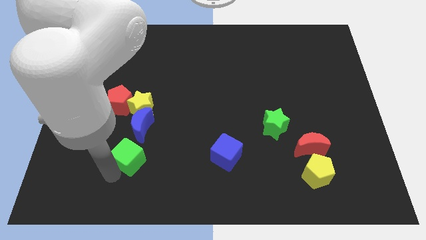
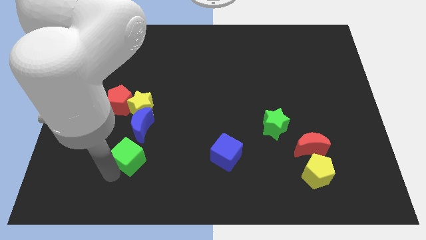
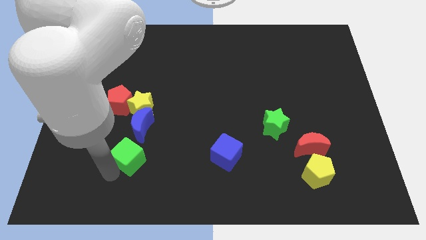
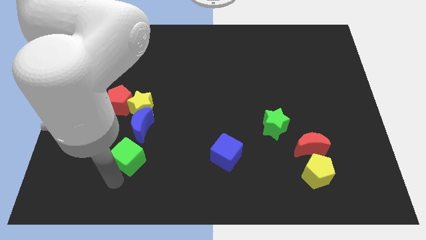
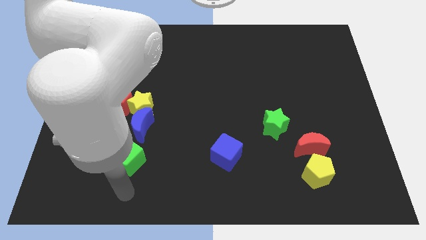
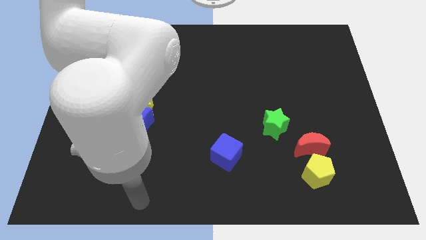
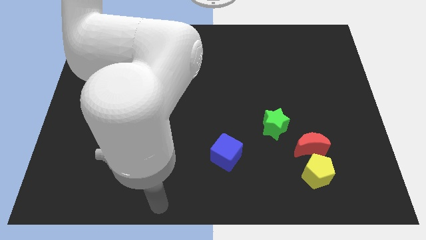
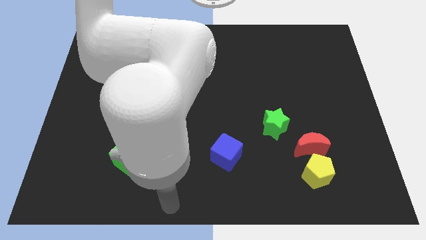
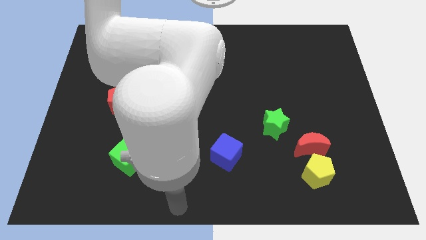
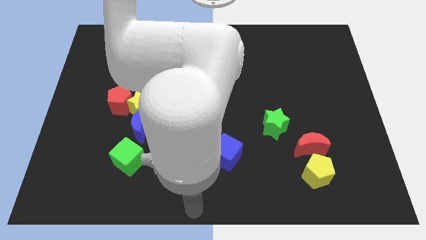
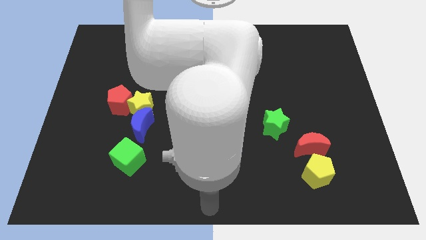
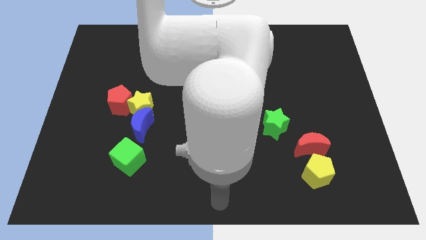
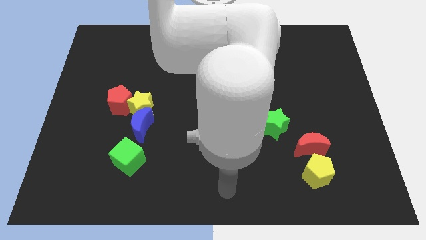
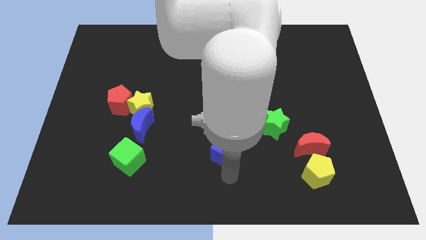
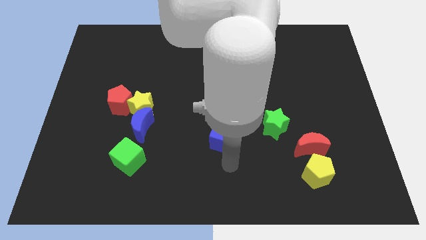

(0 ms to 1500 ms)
move your hand at the bottom of the blue cube

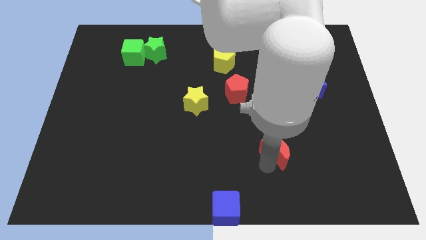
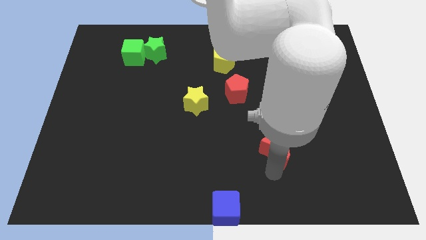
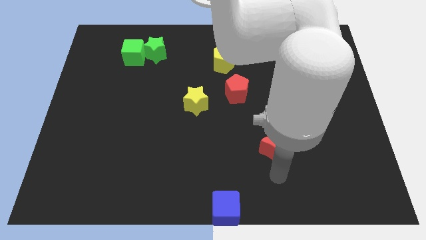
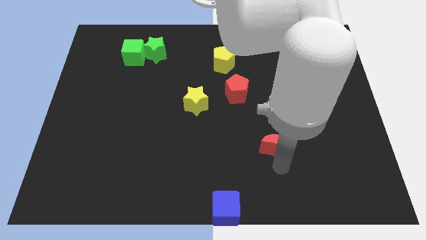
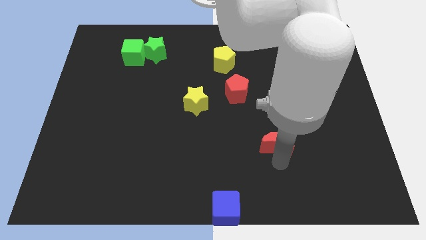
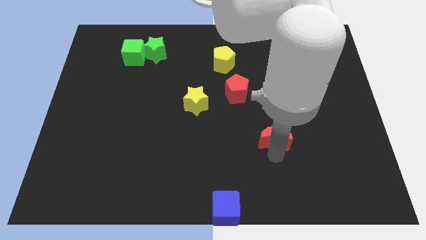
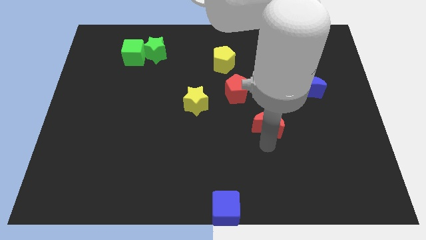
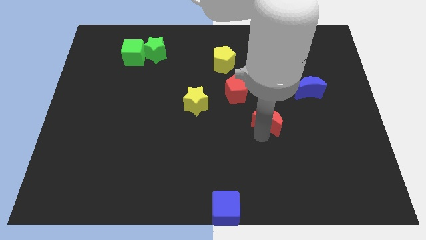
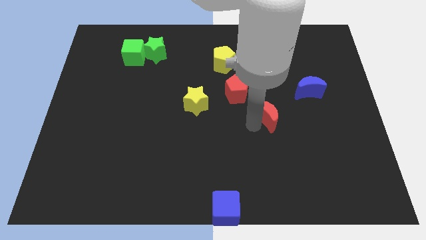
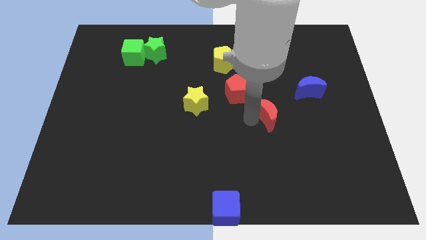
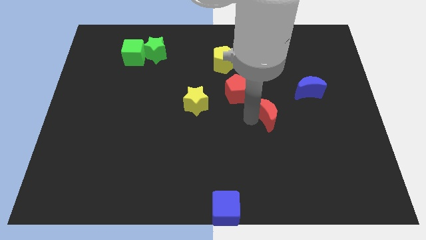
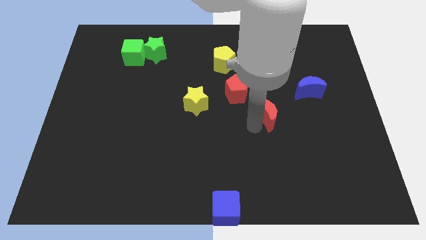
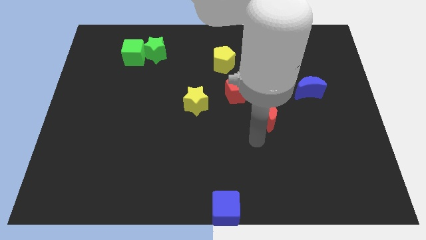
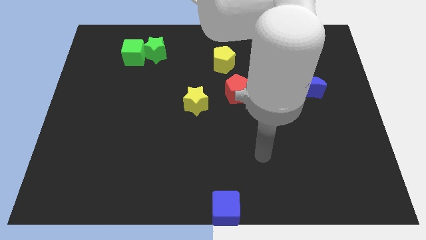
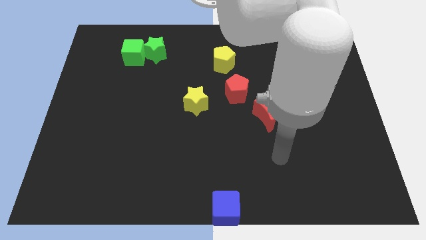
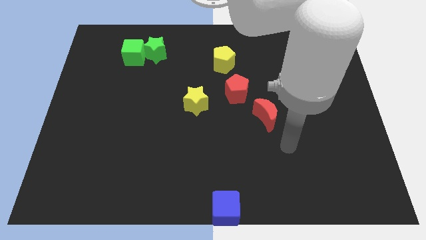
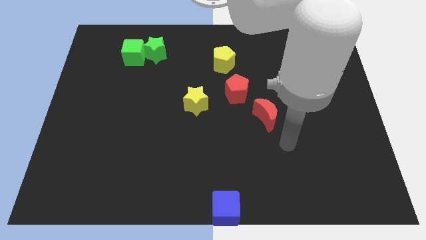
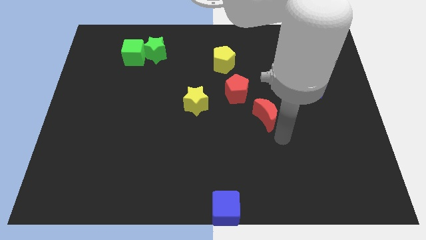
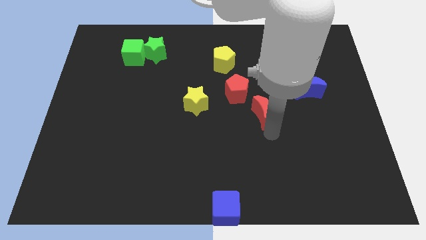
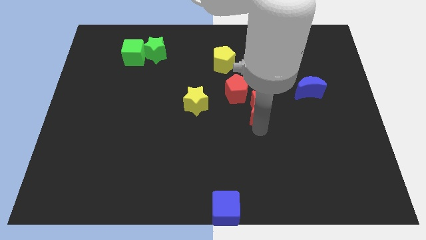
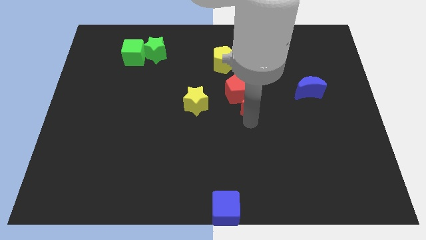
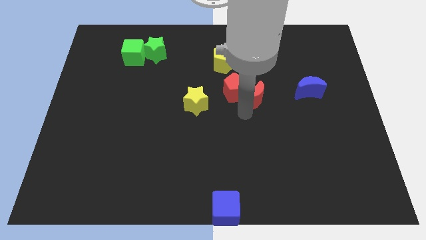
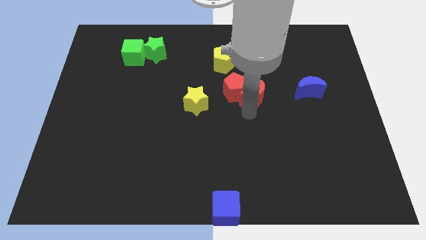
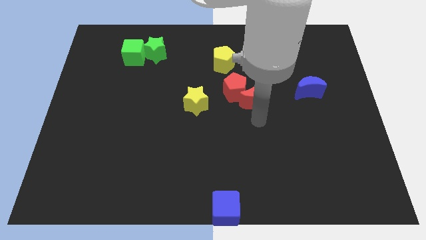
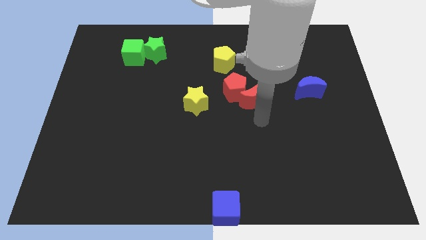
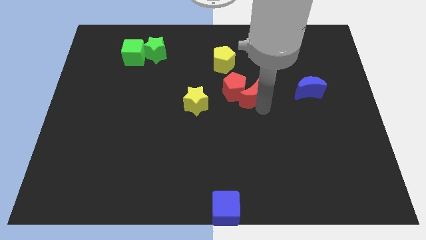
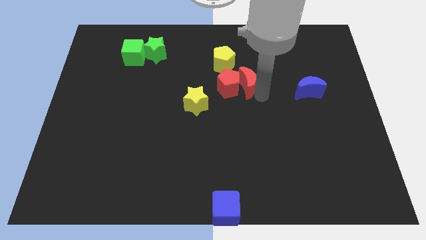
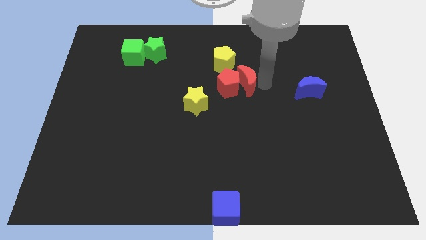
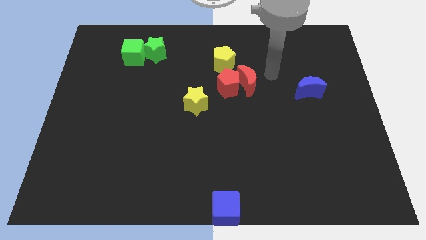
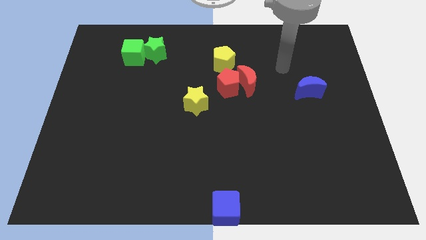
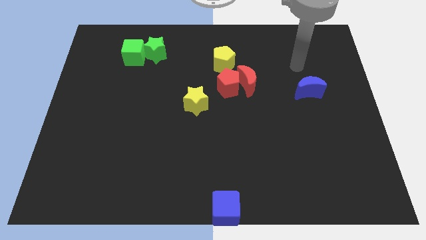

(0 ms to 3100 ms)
move the red moon to the right of red pentagon

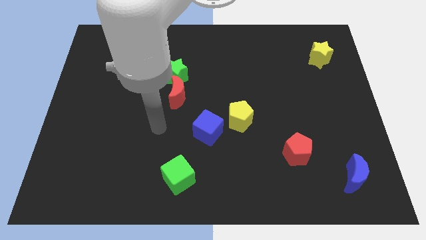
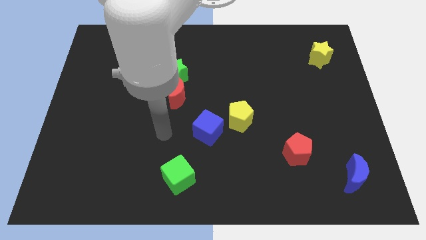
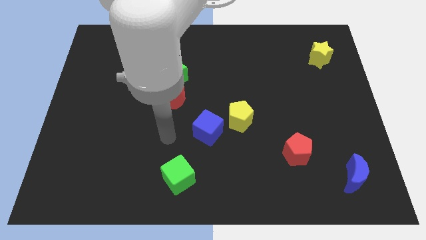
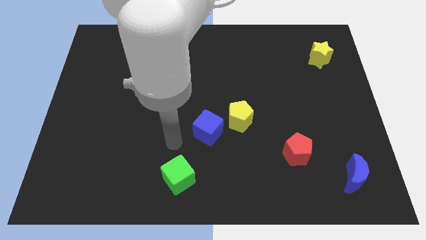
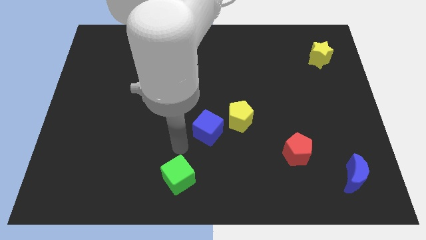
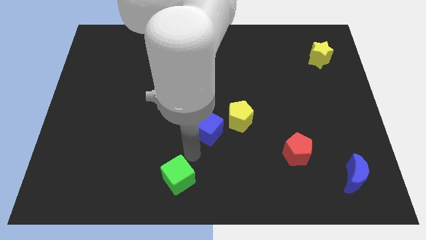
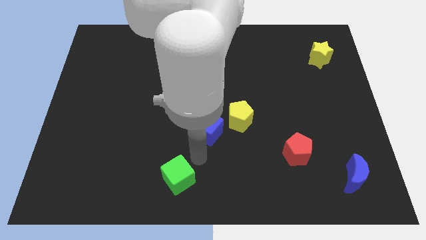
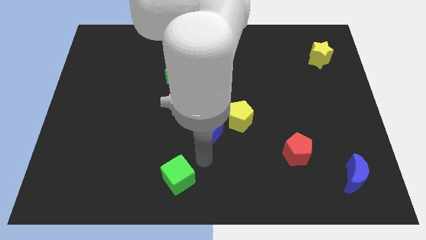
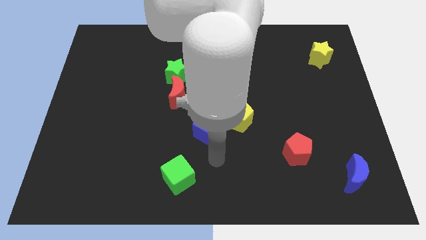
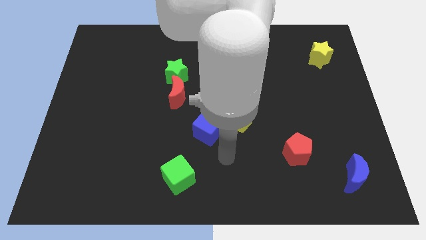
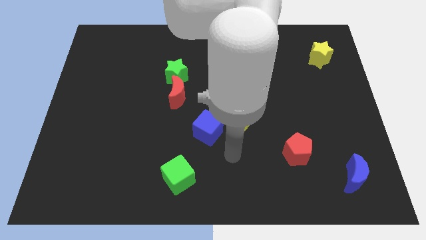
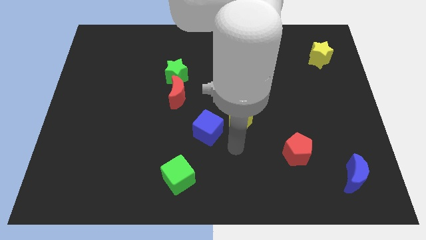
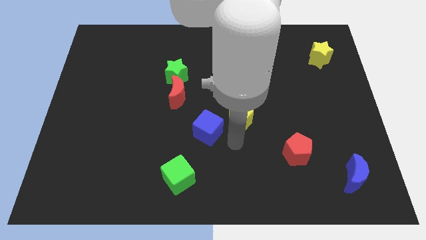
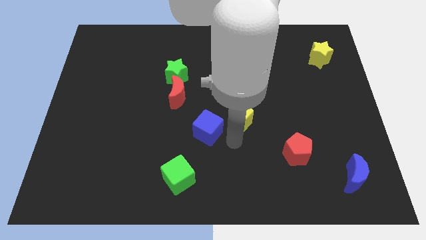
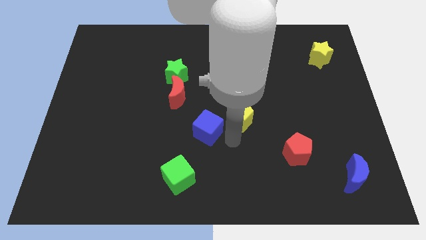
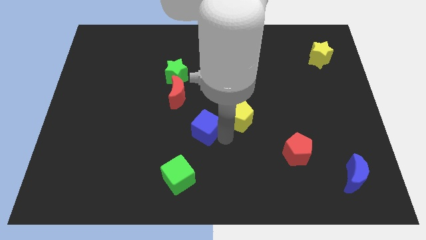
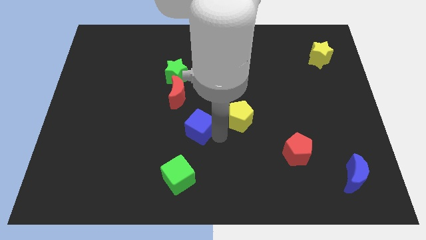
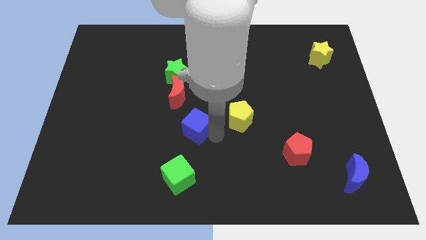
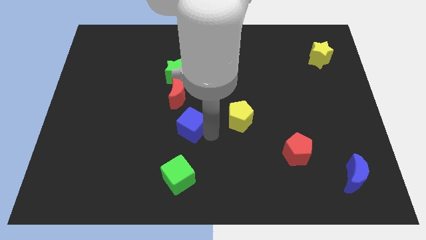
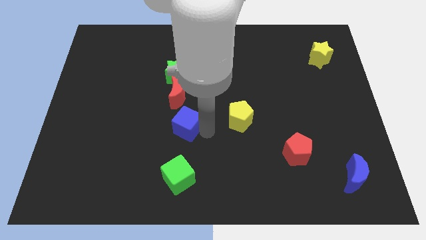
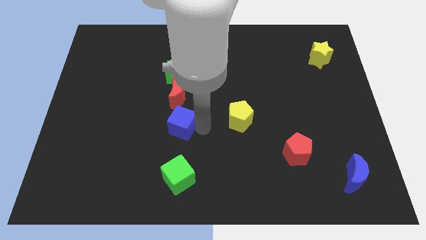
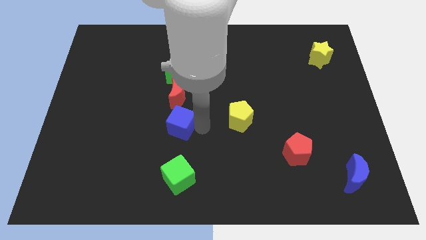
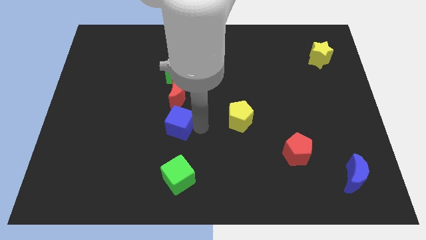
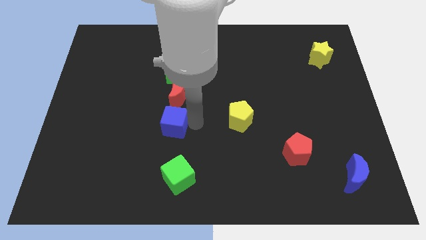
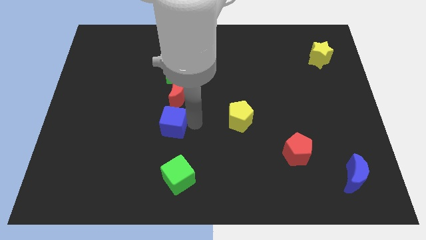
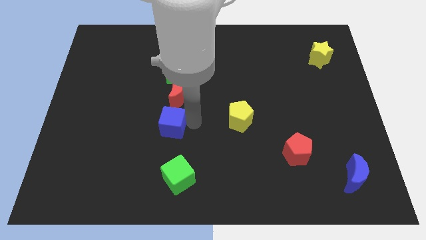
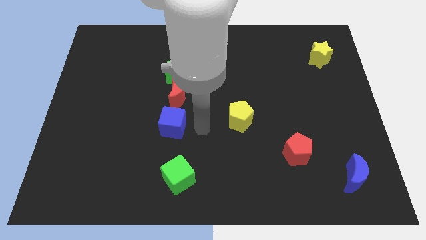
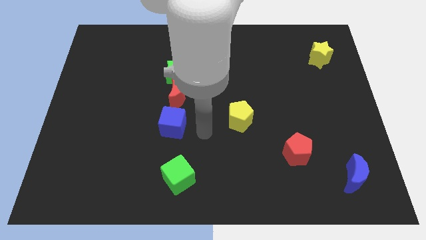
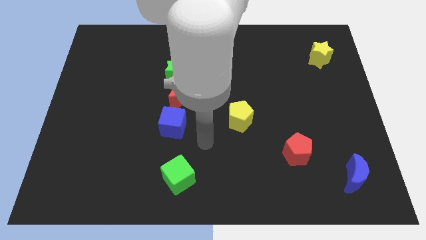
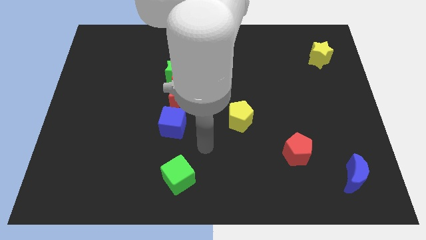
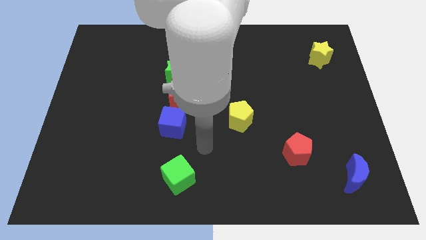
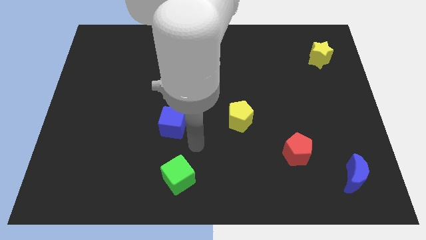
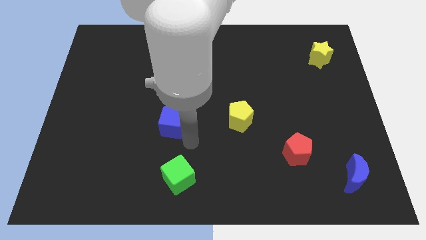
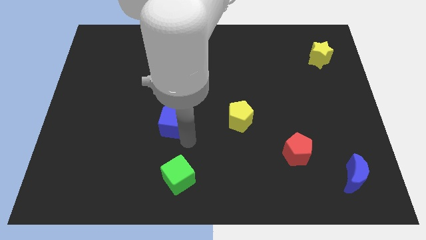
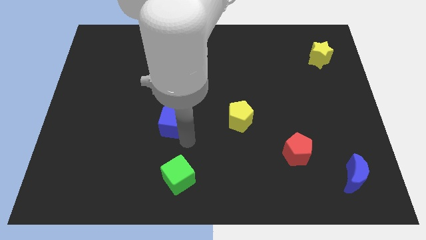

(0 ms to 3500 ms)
place the blue cube vertically above the green cube

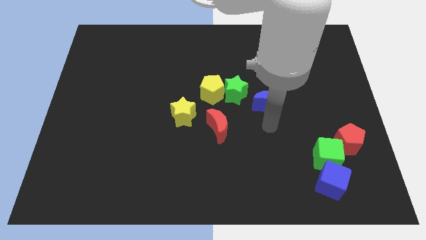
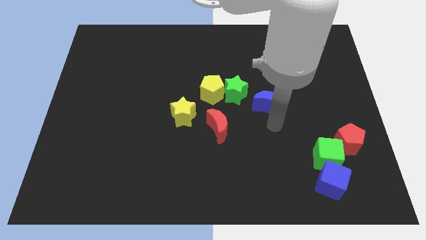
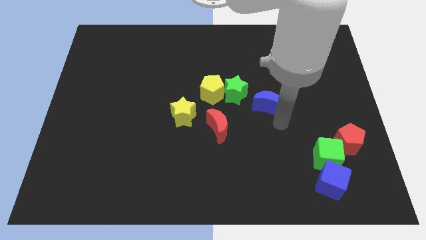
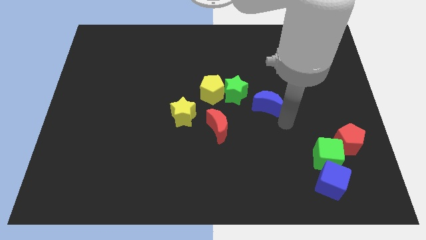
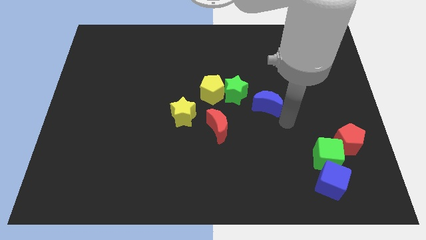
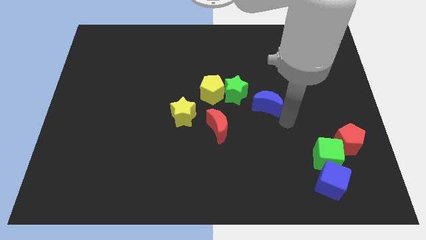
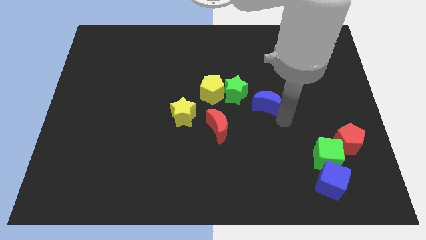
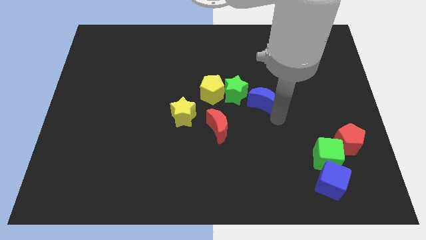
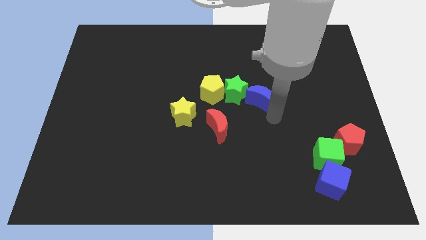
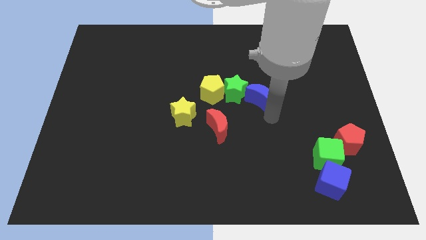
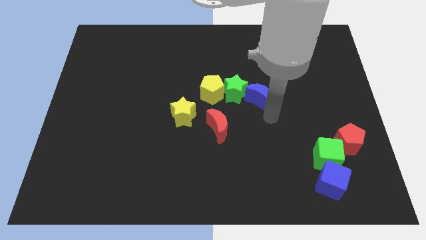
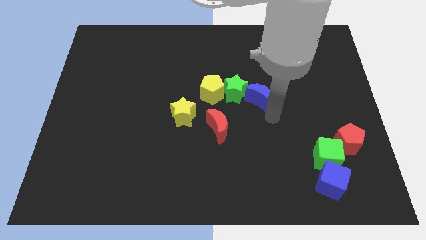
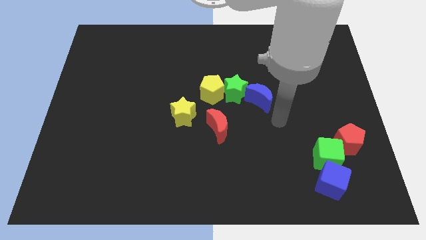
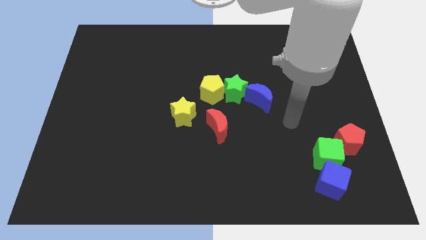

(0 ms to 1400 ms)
push the blue crescent into the green star
